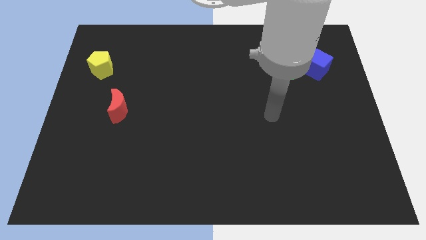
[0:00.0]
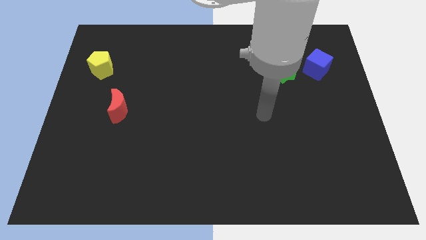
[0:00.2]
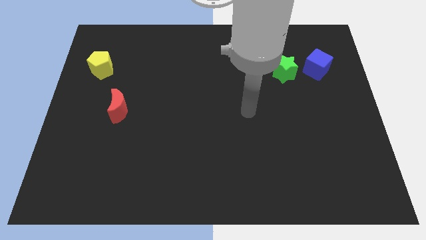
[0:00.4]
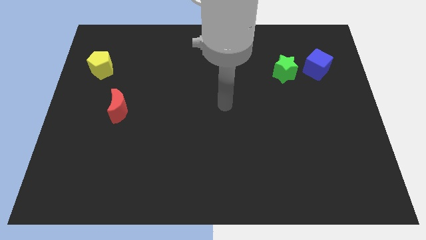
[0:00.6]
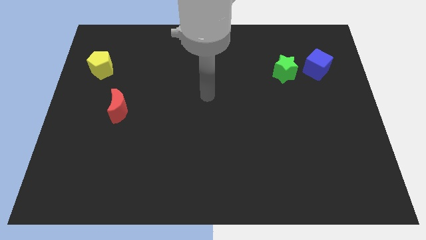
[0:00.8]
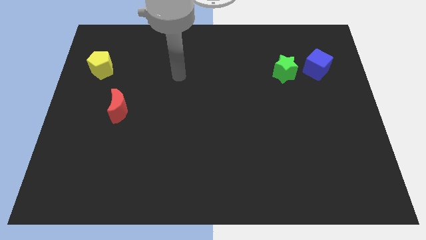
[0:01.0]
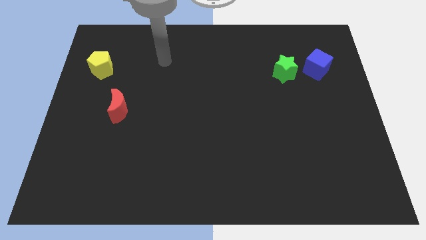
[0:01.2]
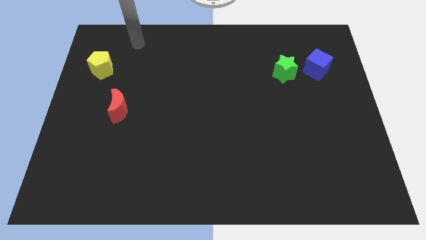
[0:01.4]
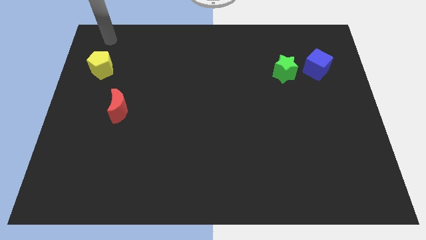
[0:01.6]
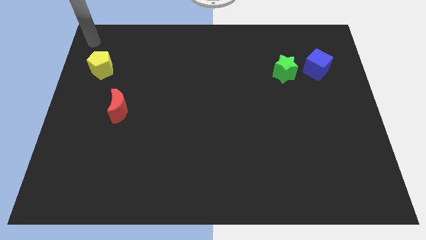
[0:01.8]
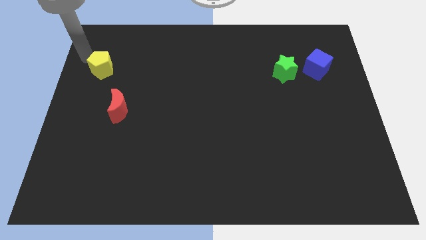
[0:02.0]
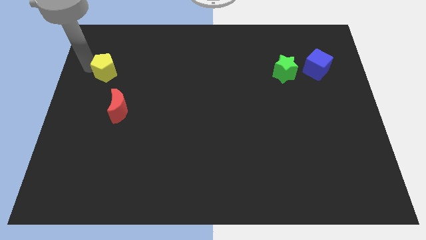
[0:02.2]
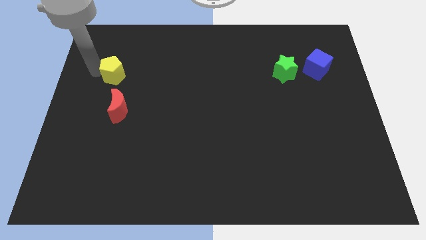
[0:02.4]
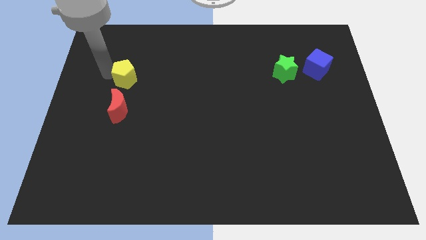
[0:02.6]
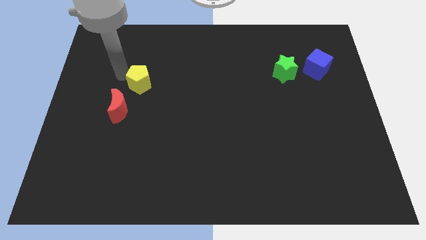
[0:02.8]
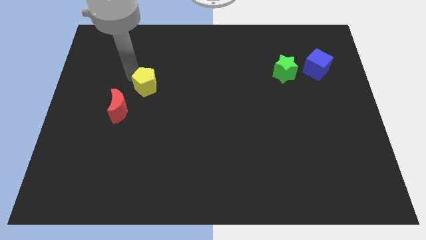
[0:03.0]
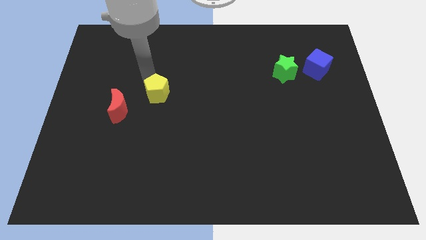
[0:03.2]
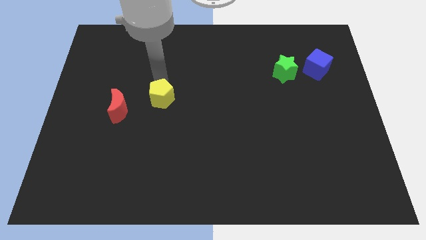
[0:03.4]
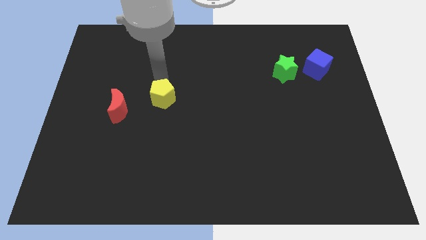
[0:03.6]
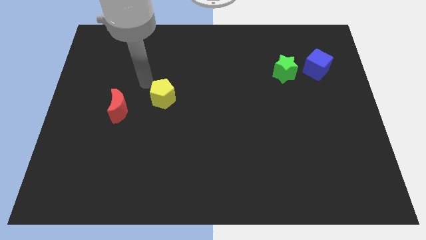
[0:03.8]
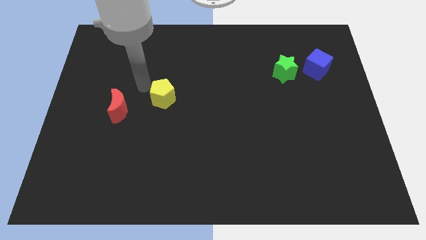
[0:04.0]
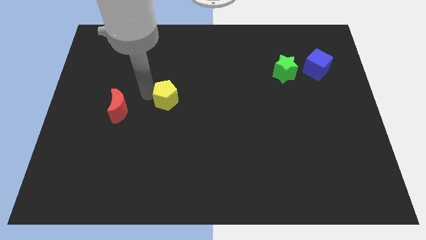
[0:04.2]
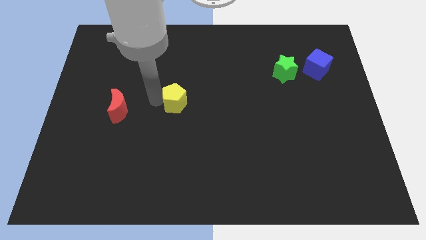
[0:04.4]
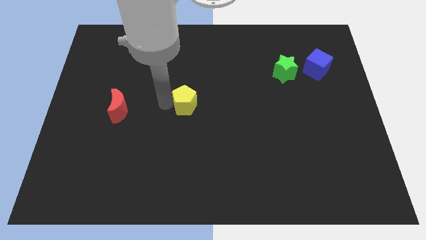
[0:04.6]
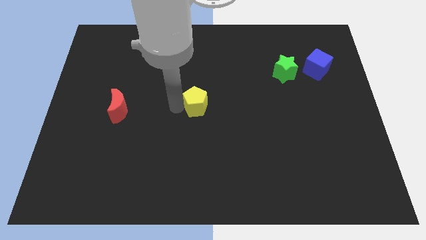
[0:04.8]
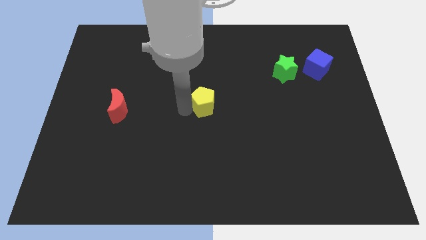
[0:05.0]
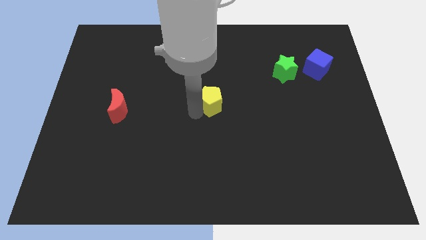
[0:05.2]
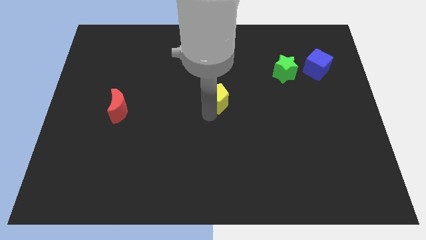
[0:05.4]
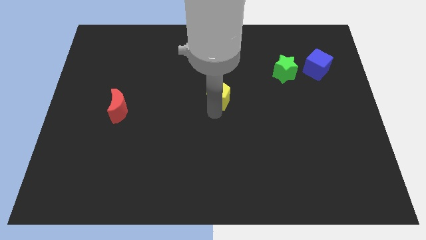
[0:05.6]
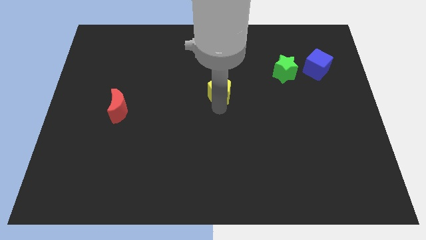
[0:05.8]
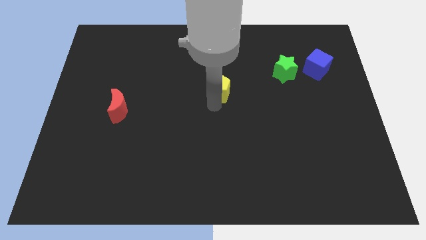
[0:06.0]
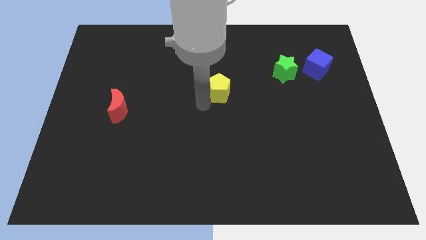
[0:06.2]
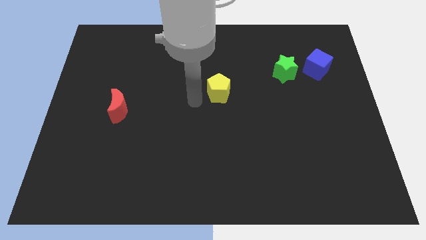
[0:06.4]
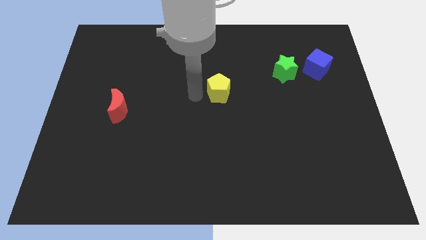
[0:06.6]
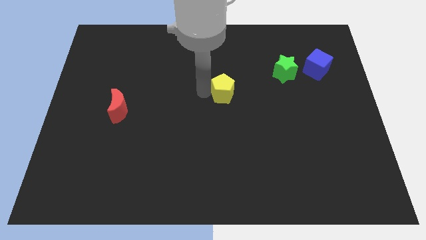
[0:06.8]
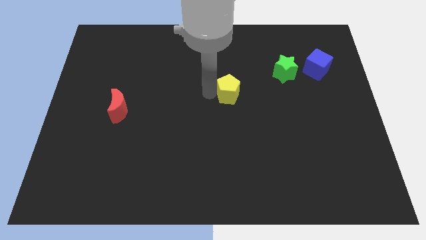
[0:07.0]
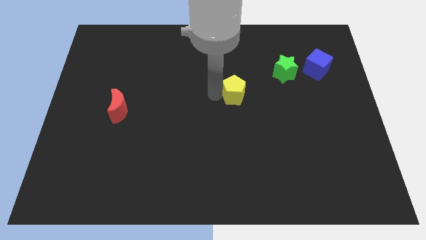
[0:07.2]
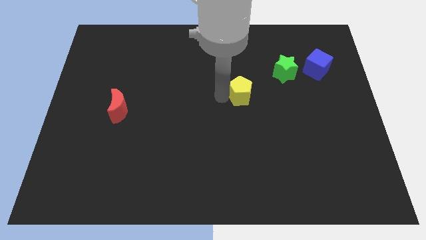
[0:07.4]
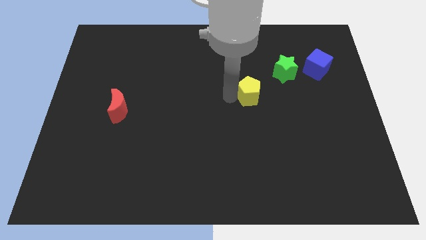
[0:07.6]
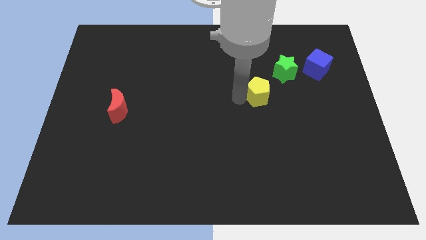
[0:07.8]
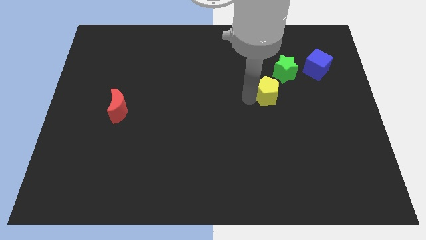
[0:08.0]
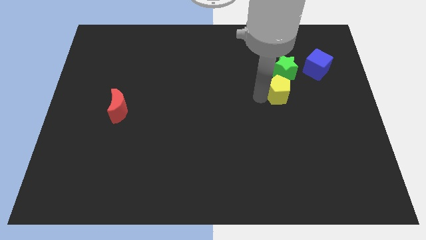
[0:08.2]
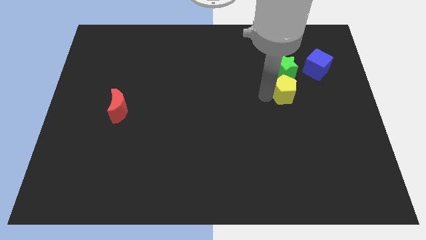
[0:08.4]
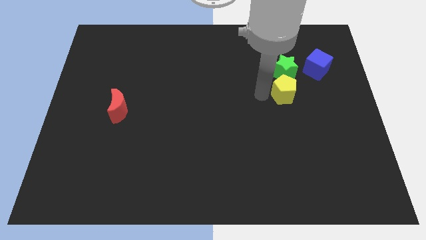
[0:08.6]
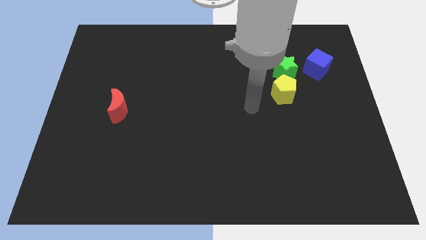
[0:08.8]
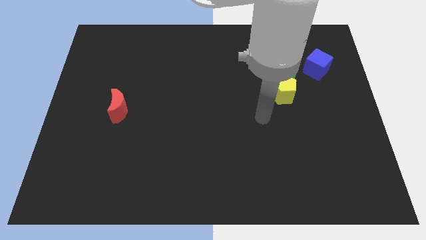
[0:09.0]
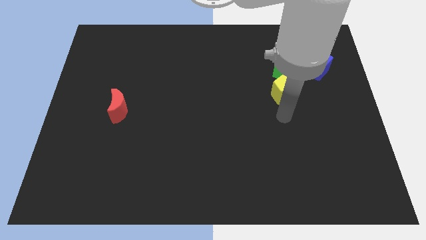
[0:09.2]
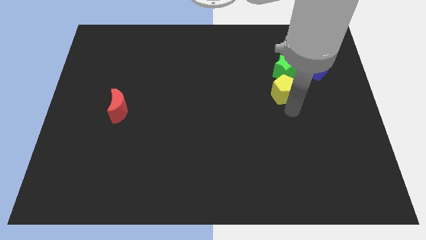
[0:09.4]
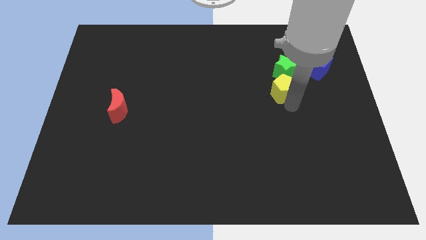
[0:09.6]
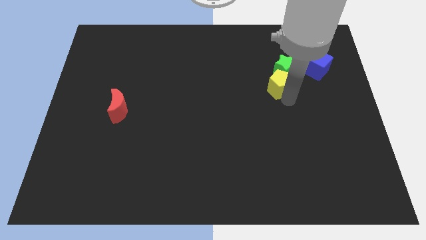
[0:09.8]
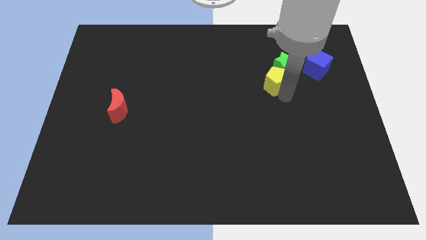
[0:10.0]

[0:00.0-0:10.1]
push the yellow pentagon next to the star

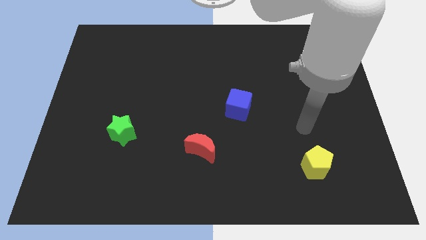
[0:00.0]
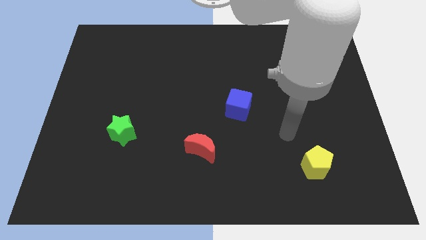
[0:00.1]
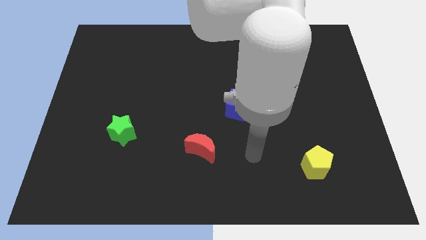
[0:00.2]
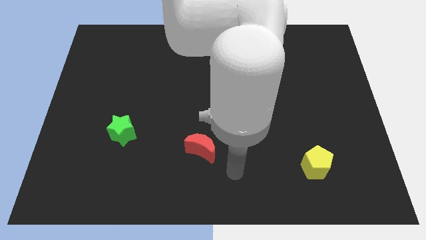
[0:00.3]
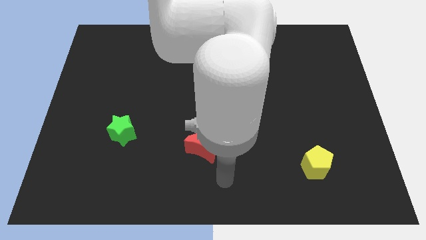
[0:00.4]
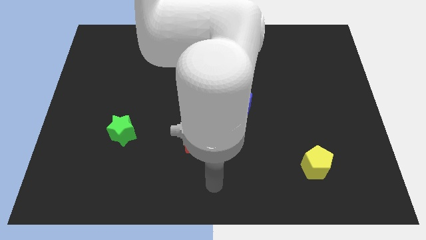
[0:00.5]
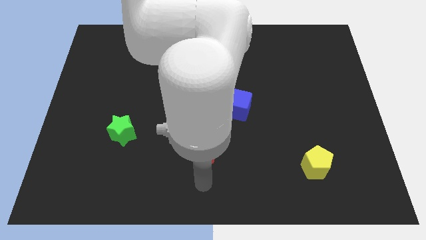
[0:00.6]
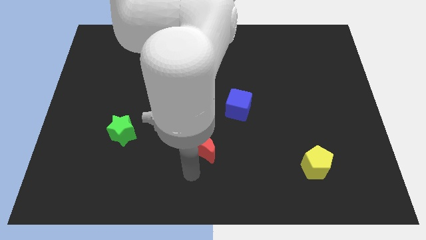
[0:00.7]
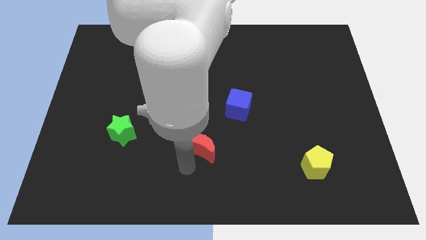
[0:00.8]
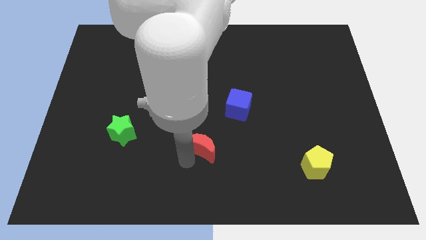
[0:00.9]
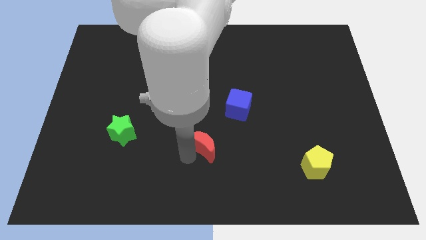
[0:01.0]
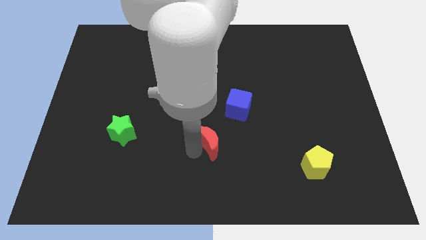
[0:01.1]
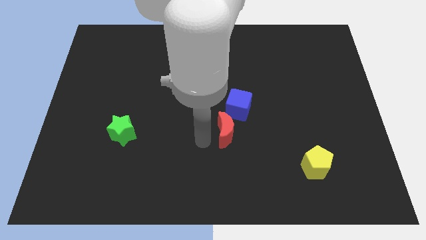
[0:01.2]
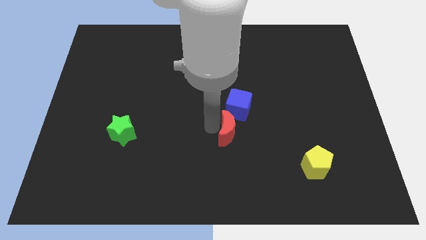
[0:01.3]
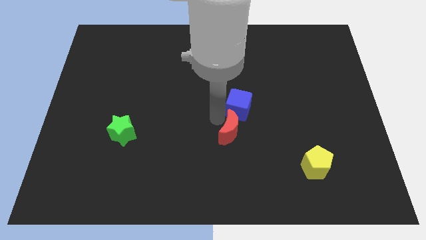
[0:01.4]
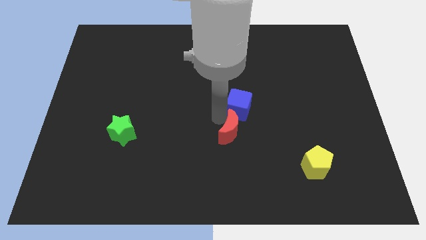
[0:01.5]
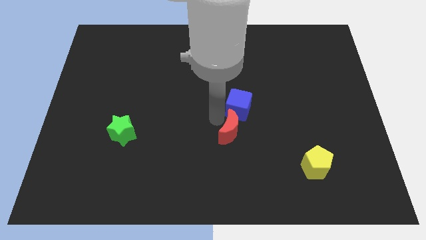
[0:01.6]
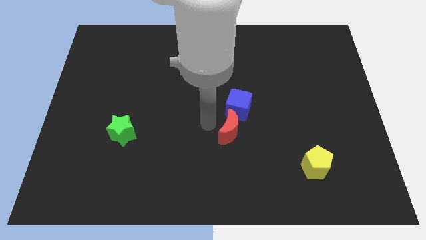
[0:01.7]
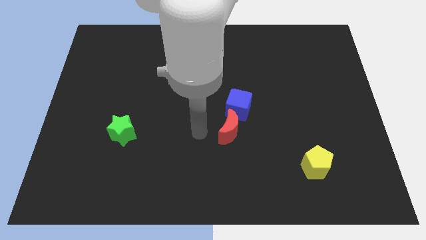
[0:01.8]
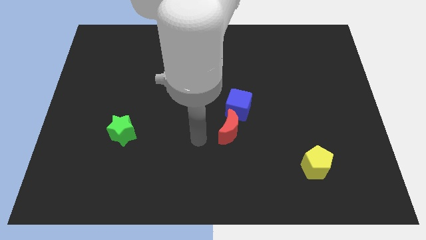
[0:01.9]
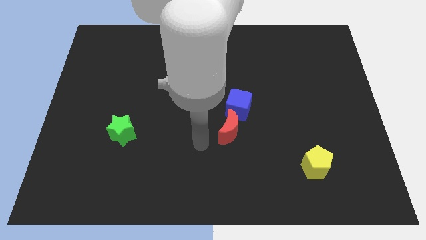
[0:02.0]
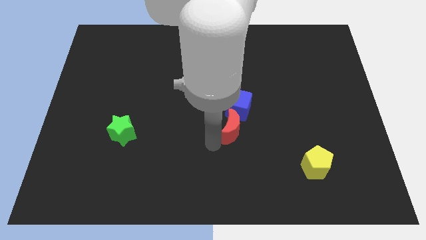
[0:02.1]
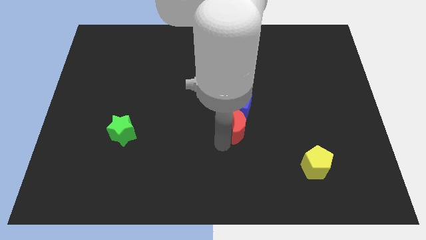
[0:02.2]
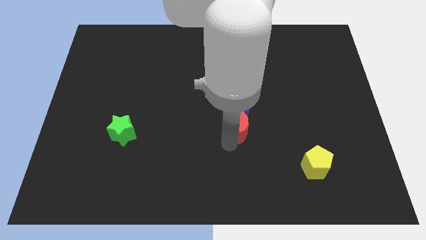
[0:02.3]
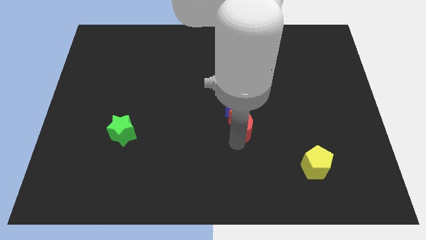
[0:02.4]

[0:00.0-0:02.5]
put the moon next to the blue block

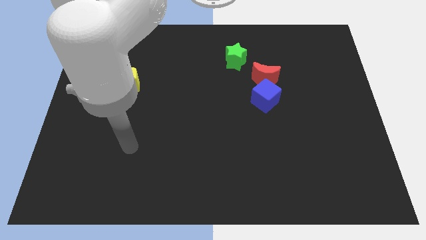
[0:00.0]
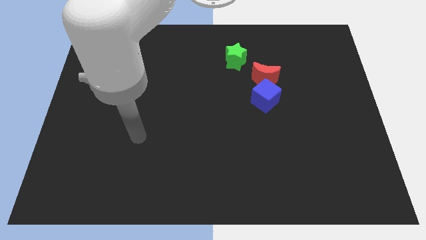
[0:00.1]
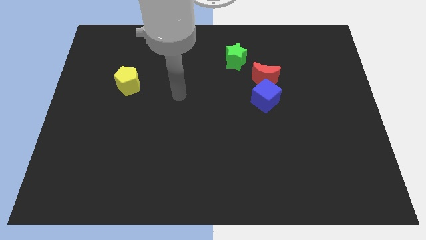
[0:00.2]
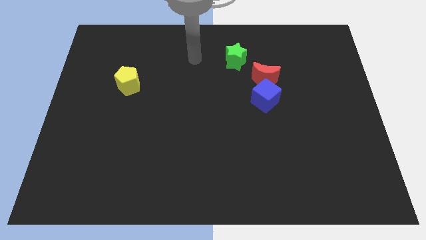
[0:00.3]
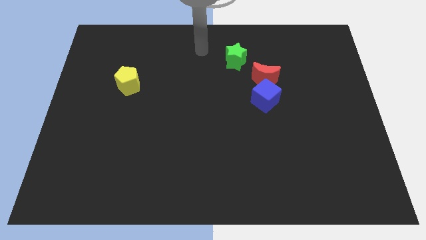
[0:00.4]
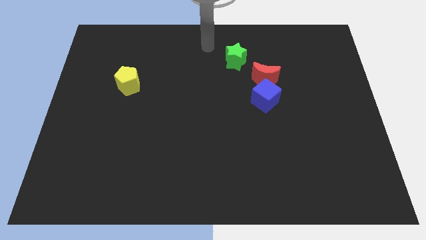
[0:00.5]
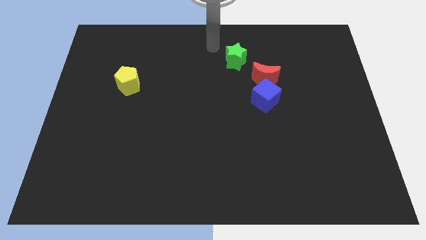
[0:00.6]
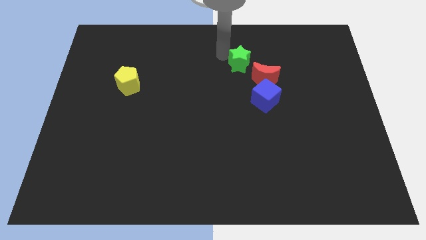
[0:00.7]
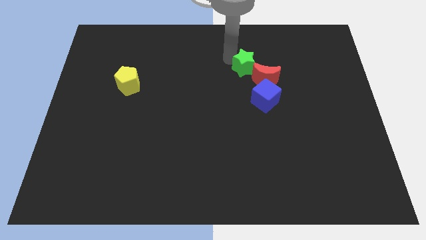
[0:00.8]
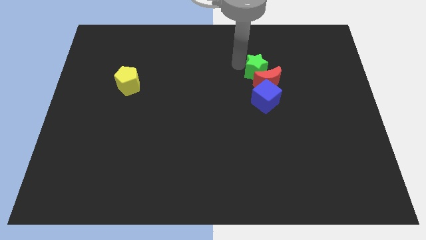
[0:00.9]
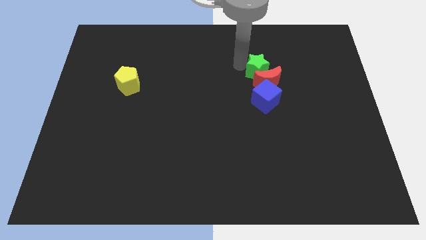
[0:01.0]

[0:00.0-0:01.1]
push the star towards the red moon
